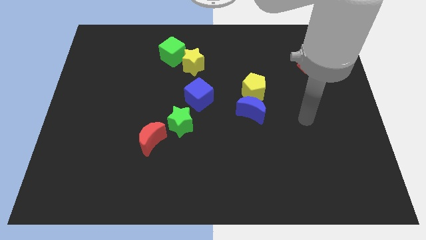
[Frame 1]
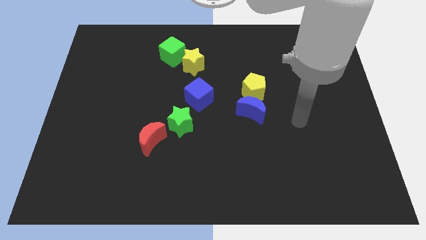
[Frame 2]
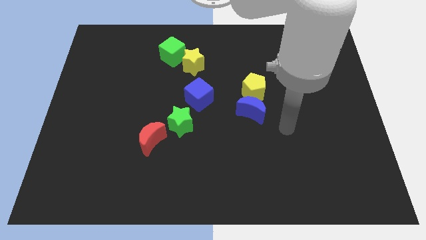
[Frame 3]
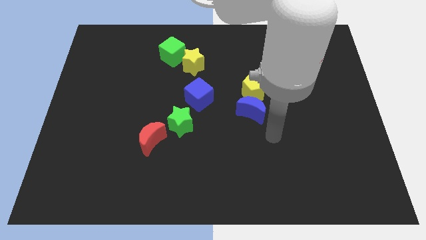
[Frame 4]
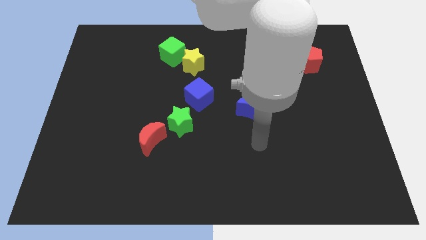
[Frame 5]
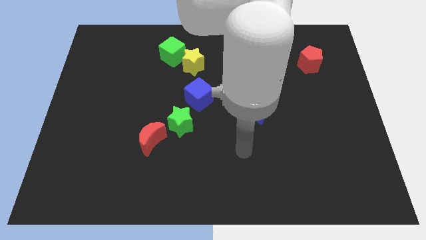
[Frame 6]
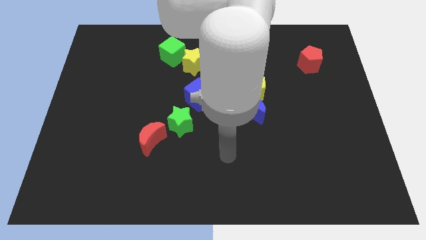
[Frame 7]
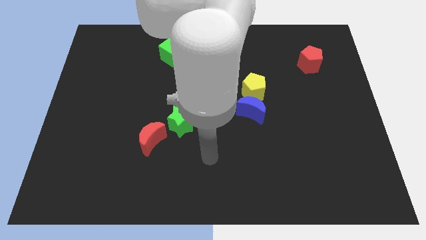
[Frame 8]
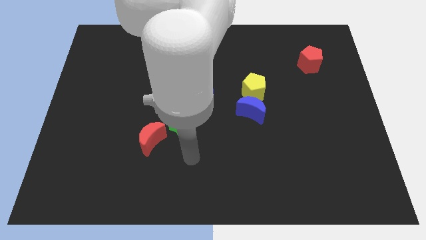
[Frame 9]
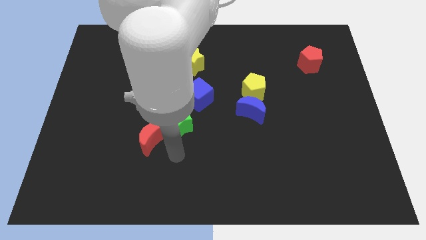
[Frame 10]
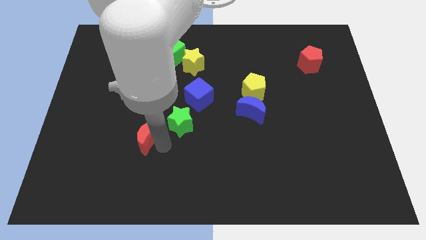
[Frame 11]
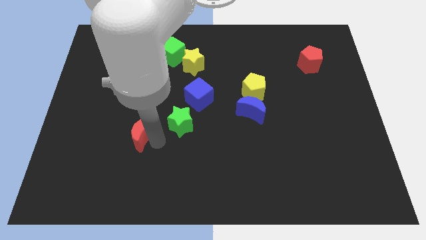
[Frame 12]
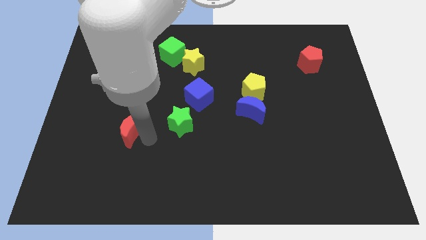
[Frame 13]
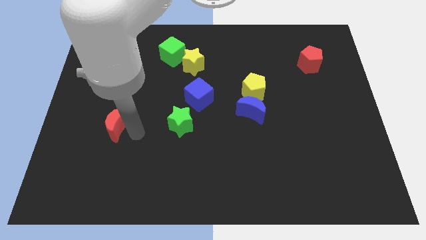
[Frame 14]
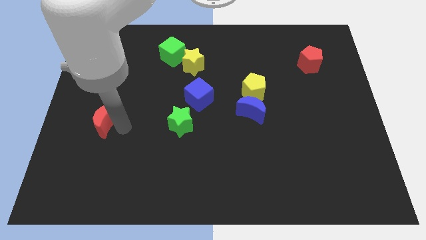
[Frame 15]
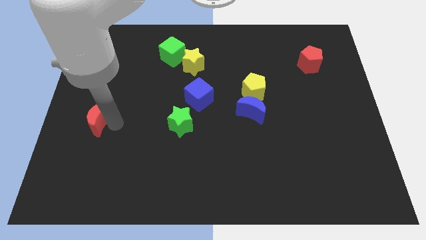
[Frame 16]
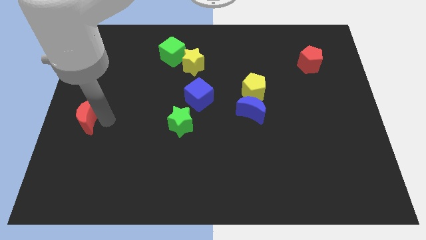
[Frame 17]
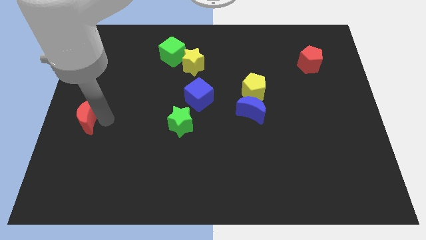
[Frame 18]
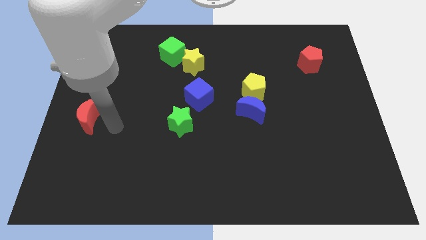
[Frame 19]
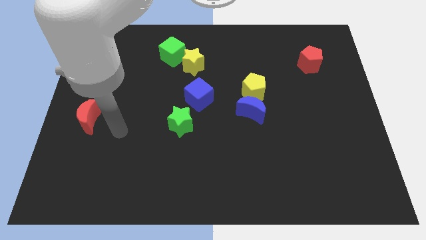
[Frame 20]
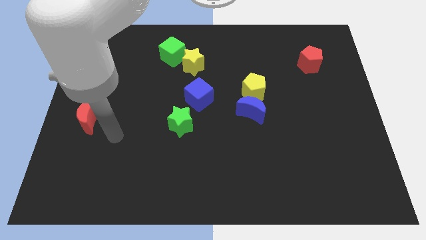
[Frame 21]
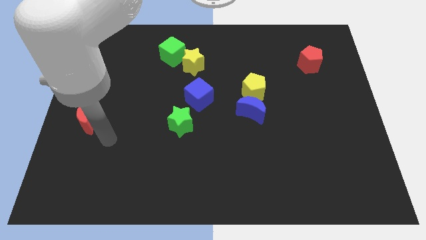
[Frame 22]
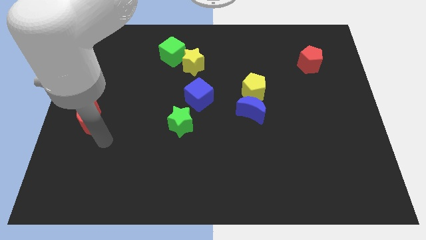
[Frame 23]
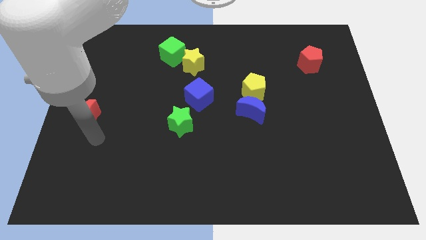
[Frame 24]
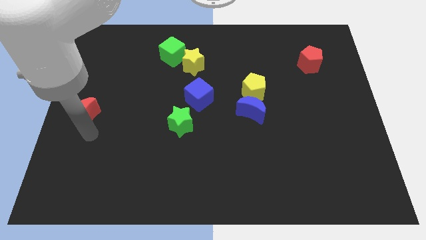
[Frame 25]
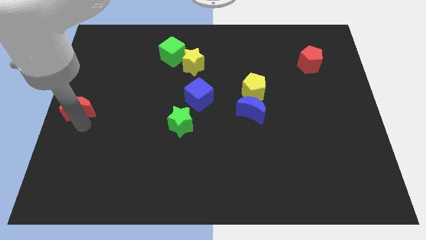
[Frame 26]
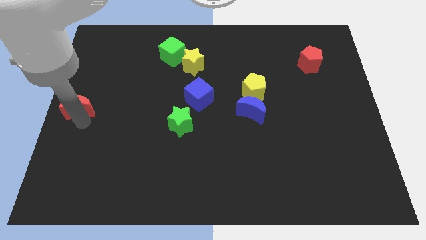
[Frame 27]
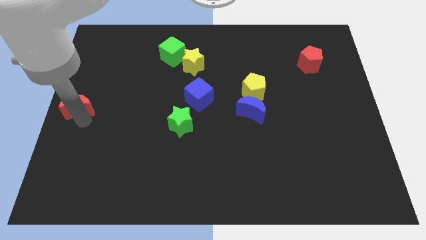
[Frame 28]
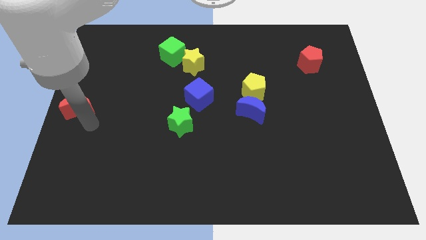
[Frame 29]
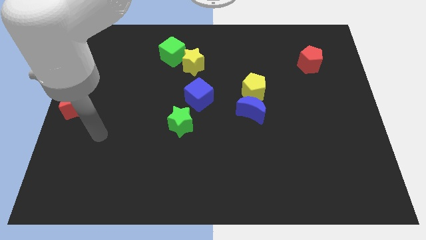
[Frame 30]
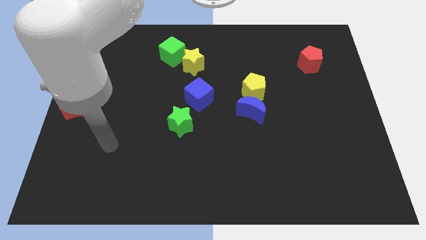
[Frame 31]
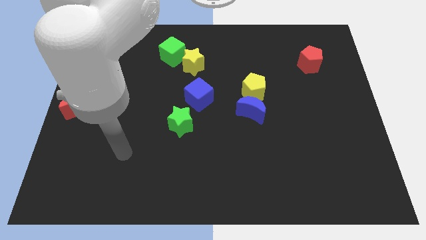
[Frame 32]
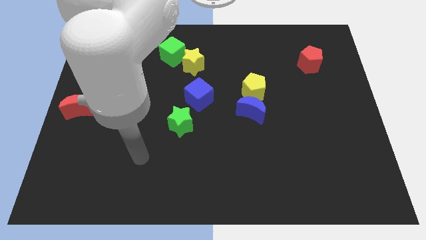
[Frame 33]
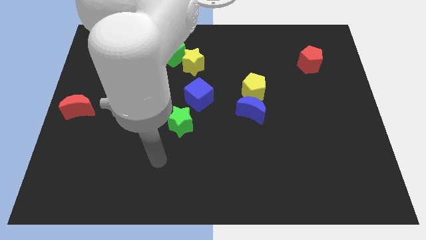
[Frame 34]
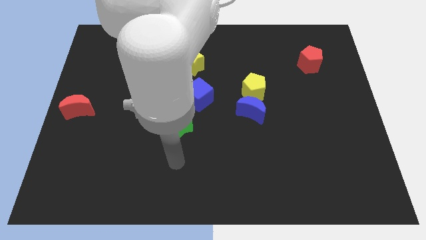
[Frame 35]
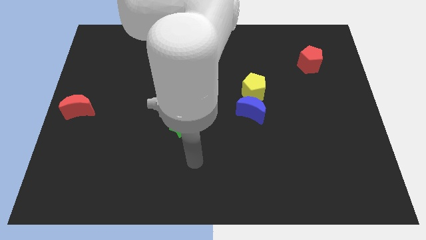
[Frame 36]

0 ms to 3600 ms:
push the red moon to the center left side of the board

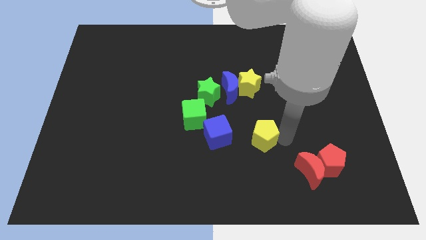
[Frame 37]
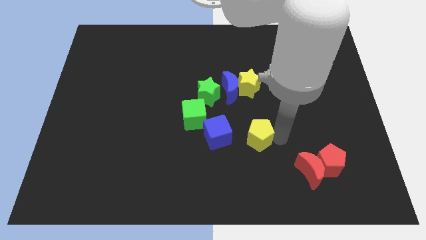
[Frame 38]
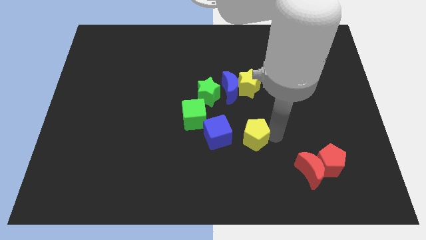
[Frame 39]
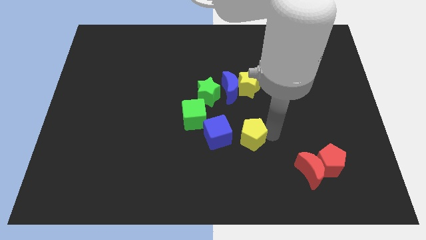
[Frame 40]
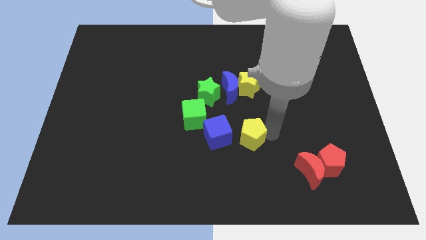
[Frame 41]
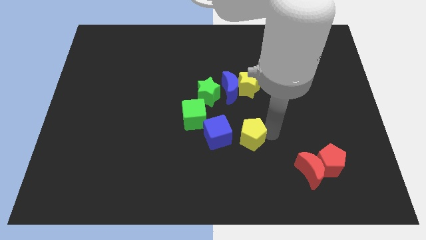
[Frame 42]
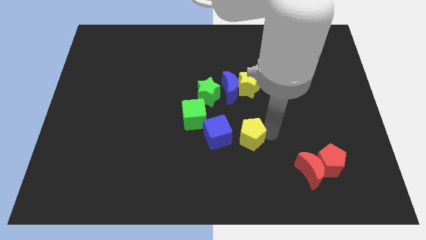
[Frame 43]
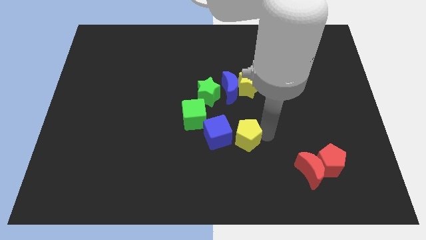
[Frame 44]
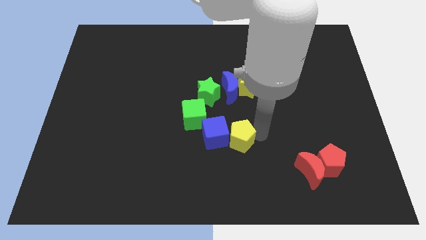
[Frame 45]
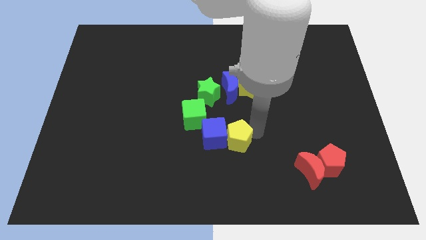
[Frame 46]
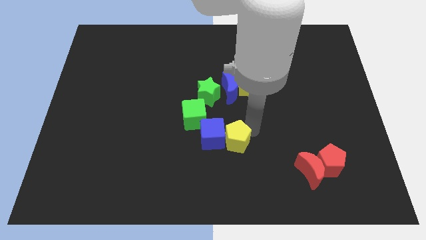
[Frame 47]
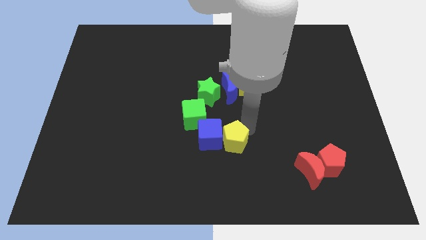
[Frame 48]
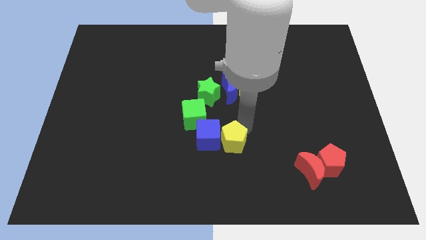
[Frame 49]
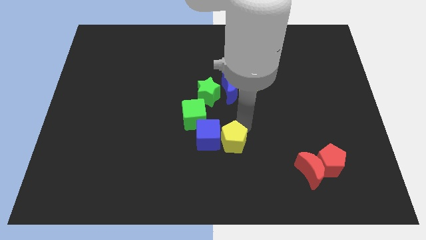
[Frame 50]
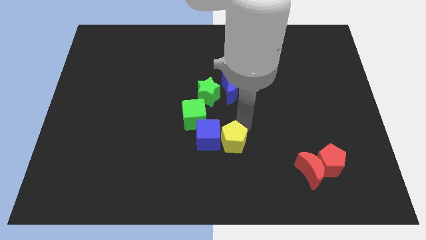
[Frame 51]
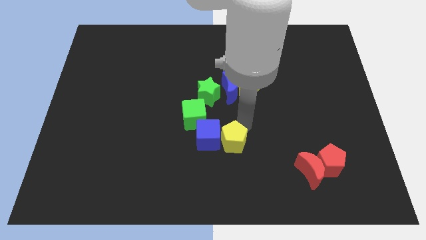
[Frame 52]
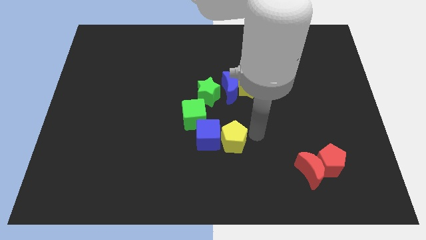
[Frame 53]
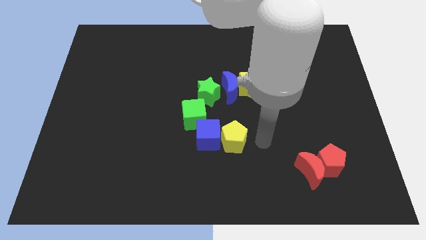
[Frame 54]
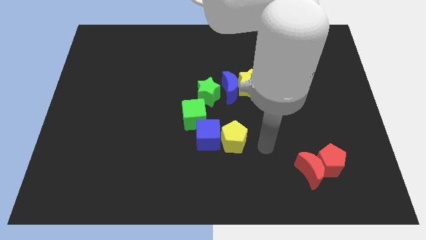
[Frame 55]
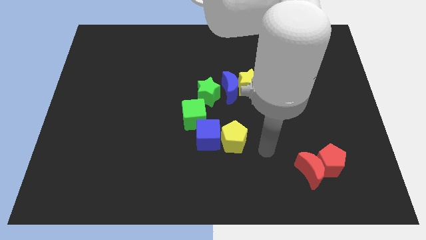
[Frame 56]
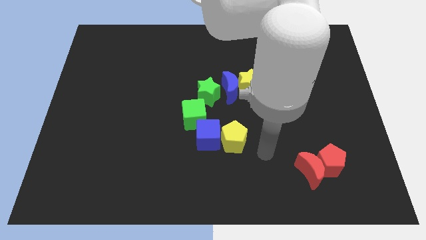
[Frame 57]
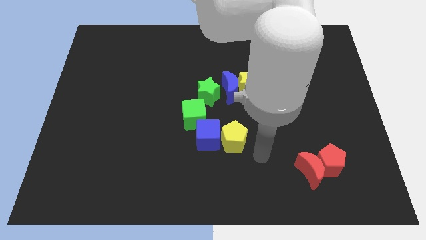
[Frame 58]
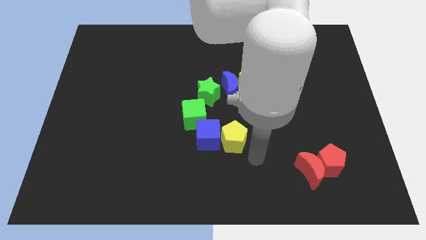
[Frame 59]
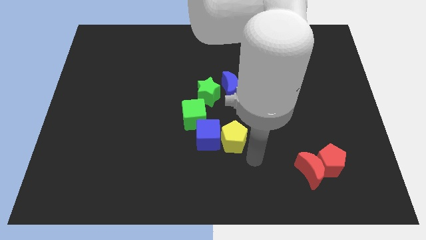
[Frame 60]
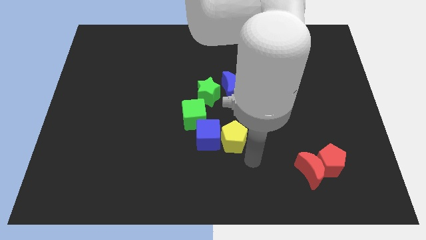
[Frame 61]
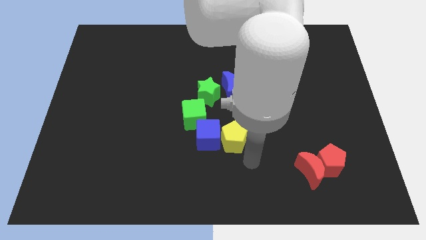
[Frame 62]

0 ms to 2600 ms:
push yellow pentagon into the blue cube

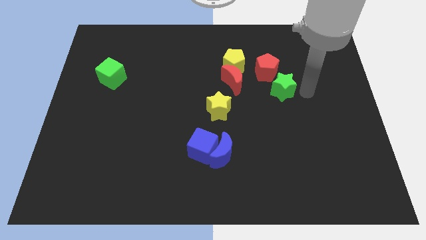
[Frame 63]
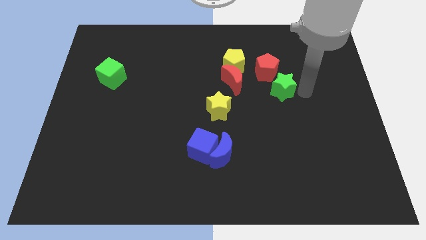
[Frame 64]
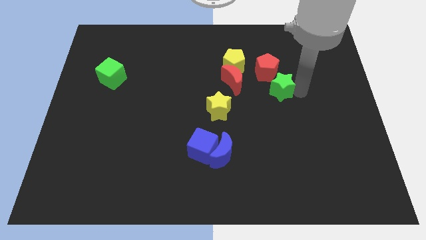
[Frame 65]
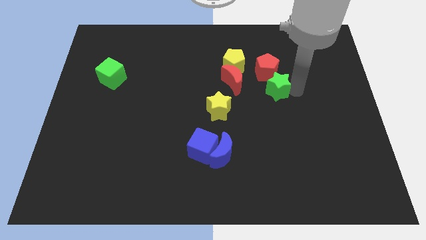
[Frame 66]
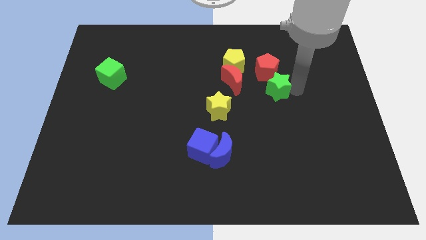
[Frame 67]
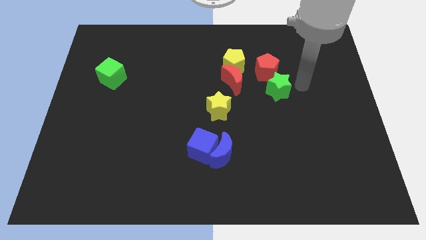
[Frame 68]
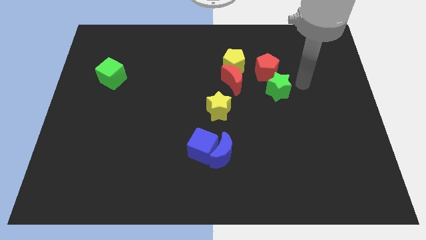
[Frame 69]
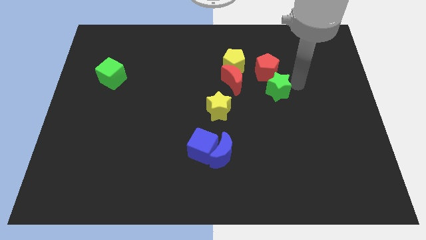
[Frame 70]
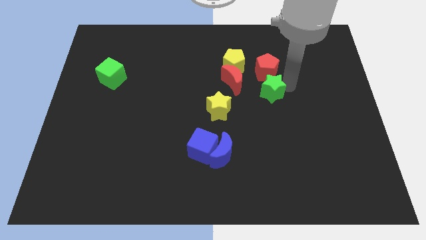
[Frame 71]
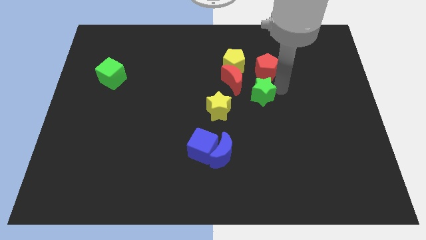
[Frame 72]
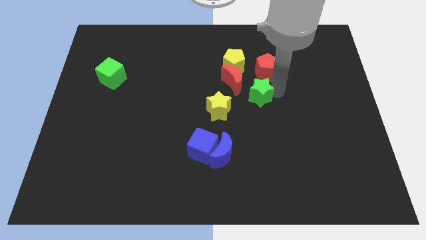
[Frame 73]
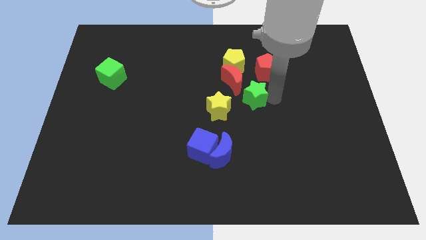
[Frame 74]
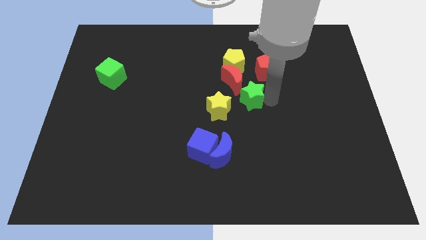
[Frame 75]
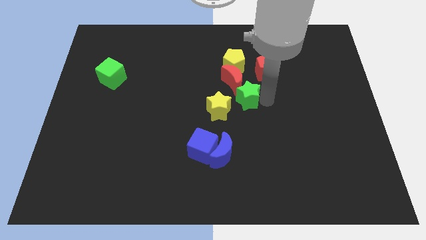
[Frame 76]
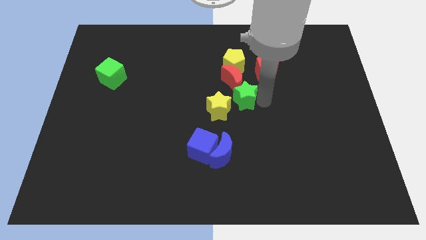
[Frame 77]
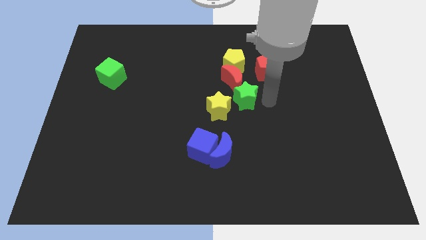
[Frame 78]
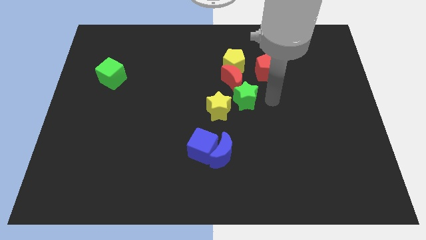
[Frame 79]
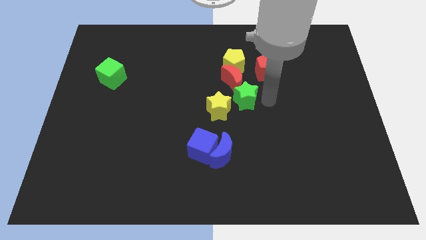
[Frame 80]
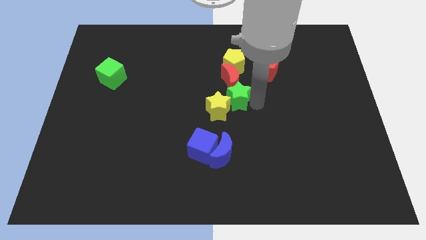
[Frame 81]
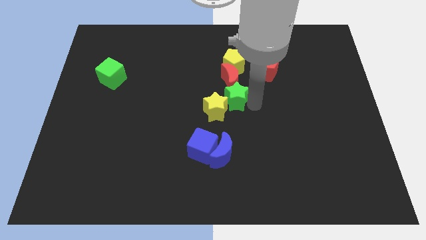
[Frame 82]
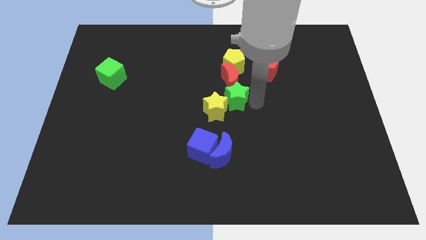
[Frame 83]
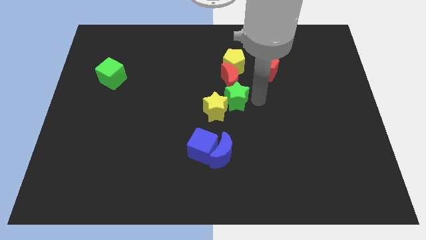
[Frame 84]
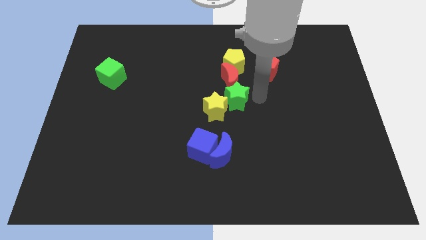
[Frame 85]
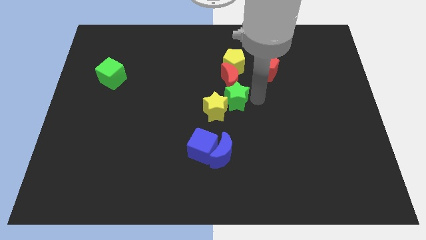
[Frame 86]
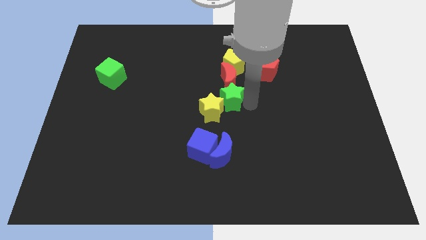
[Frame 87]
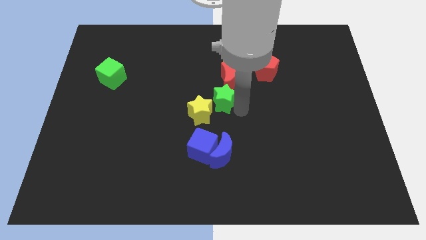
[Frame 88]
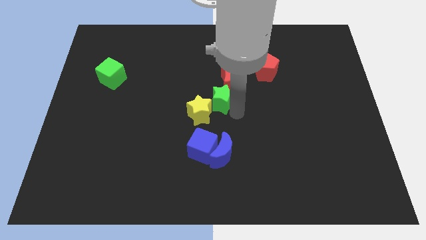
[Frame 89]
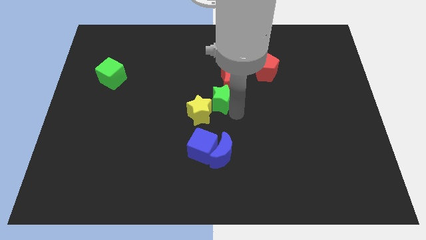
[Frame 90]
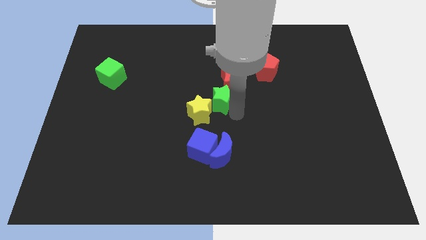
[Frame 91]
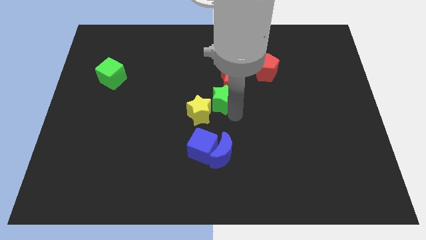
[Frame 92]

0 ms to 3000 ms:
move the green star to the bottom of the red moon
